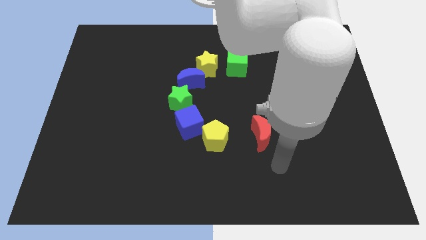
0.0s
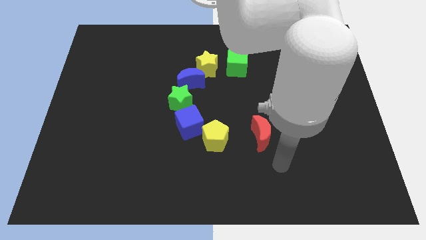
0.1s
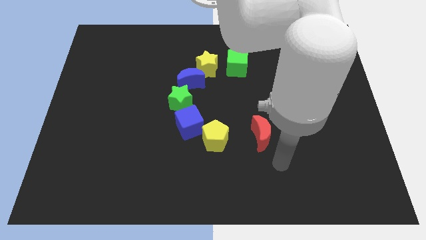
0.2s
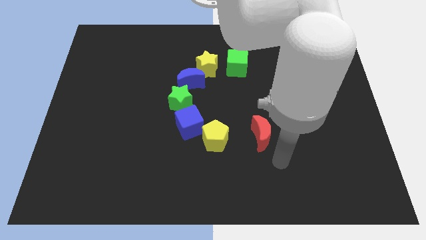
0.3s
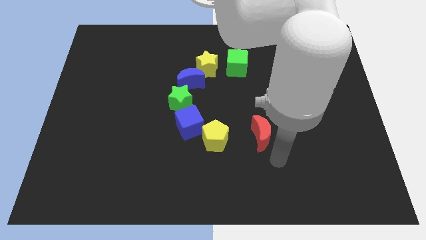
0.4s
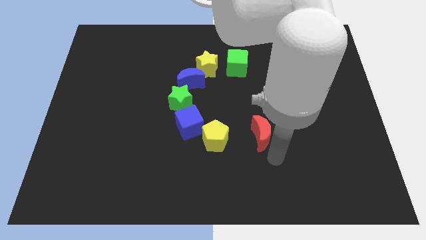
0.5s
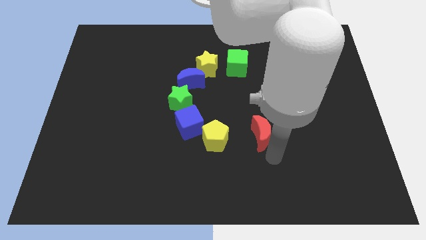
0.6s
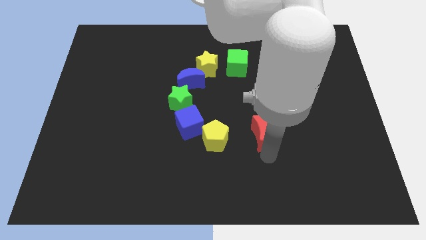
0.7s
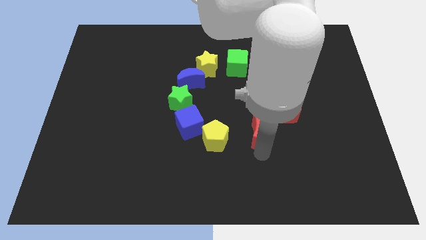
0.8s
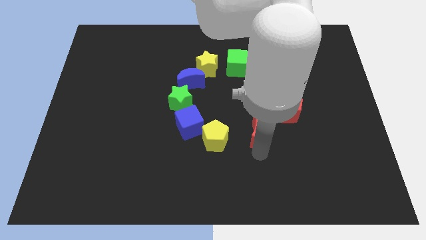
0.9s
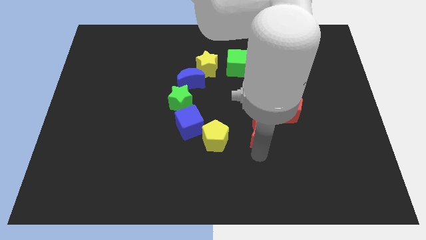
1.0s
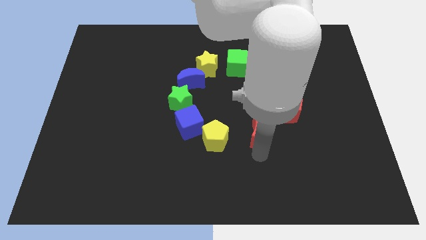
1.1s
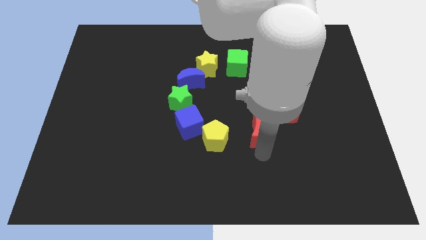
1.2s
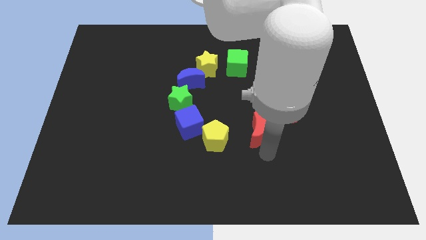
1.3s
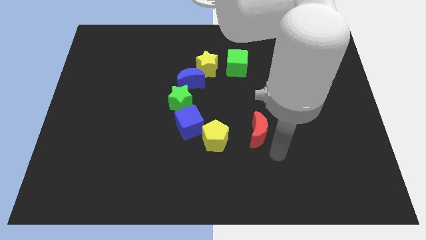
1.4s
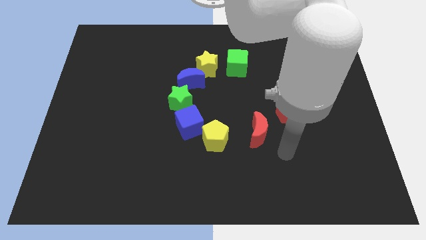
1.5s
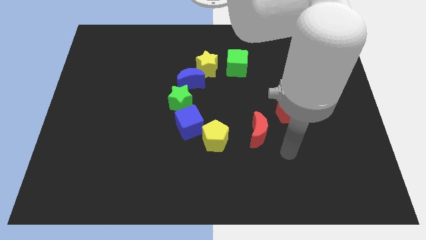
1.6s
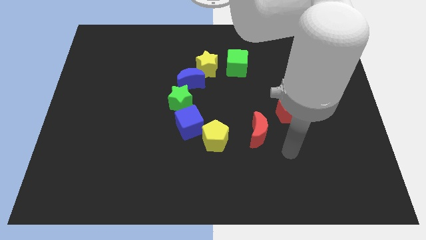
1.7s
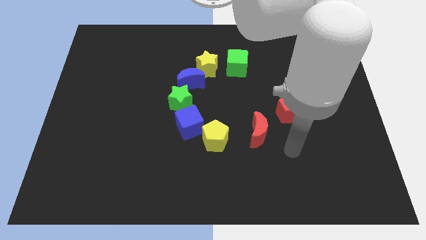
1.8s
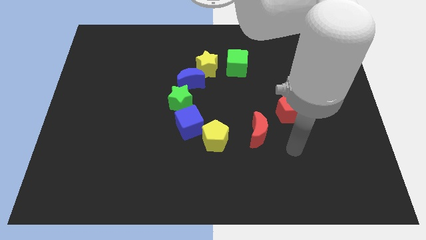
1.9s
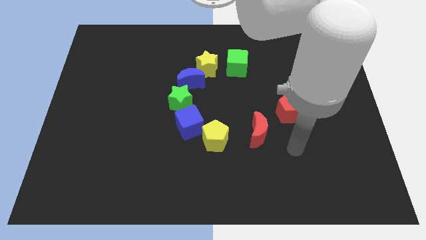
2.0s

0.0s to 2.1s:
move the red crescent to the top right side of the yellow pentagon

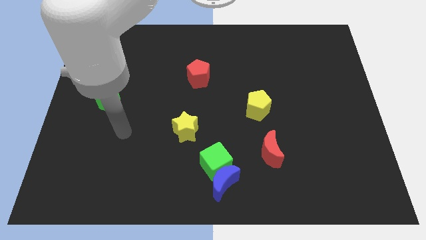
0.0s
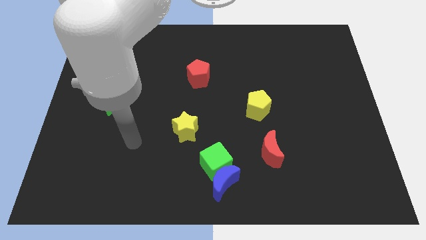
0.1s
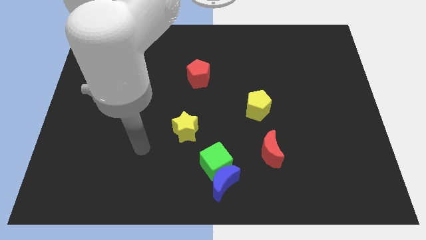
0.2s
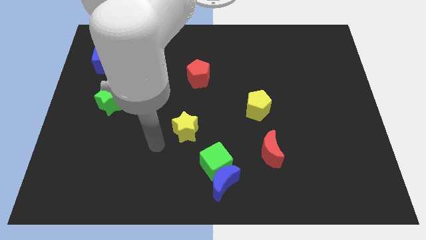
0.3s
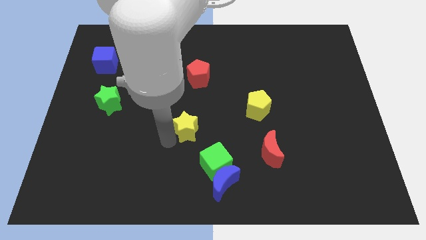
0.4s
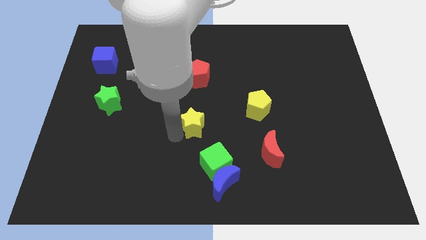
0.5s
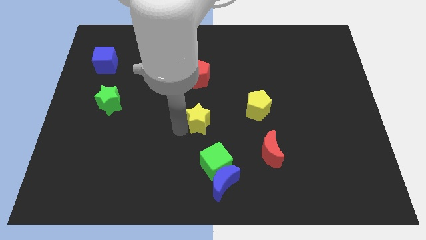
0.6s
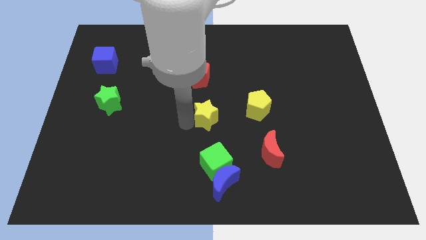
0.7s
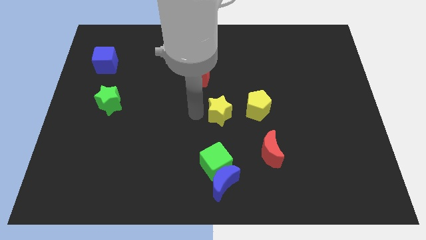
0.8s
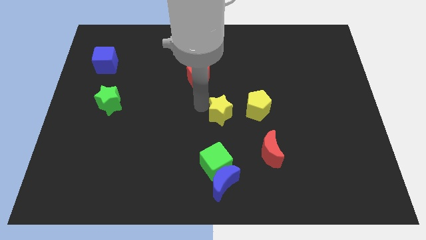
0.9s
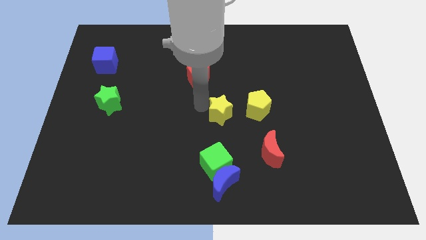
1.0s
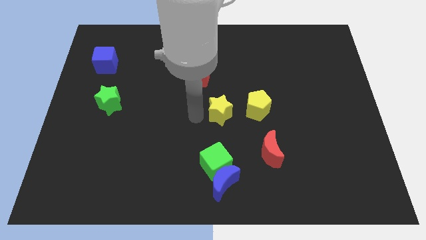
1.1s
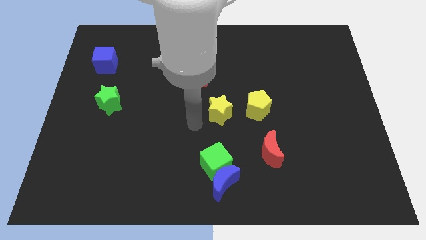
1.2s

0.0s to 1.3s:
place the yellow star left to the yellow pentagon

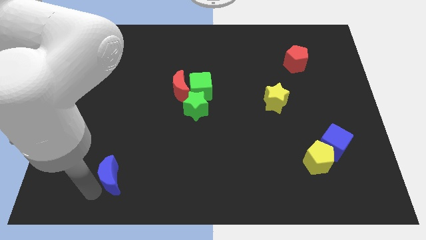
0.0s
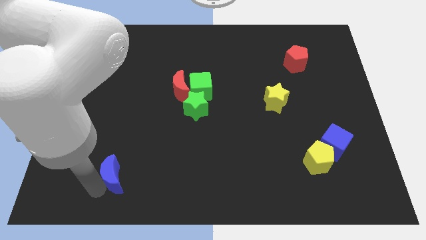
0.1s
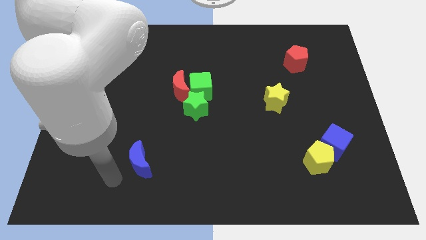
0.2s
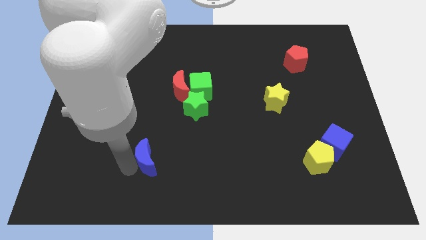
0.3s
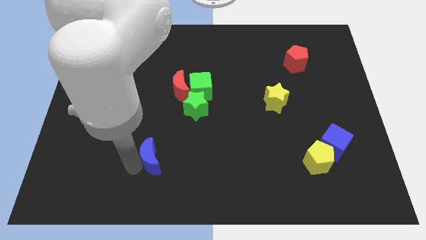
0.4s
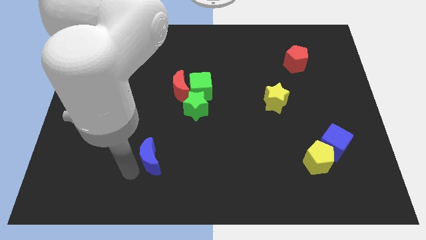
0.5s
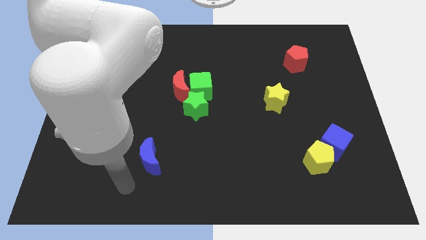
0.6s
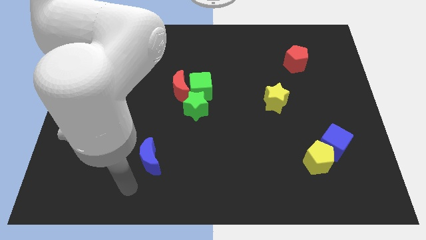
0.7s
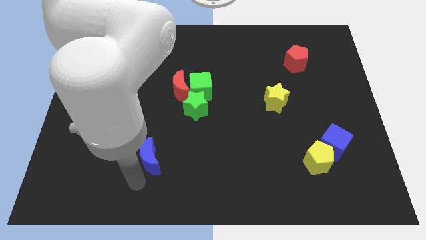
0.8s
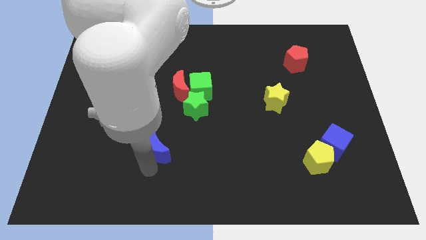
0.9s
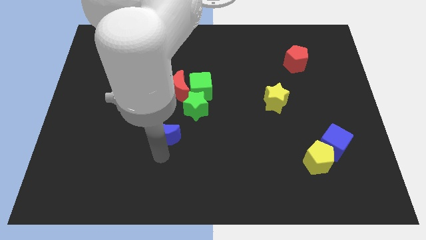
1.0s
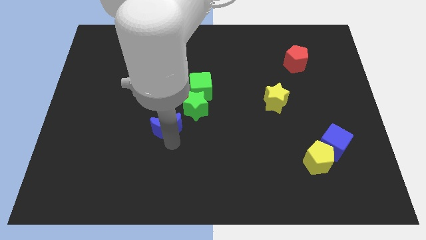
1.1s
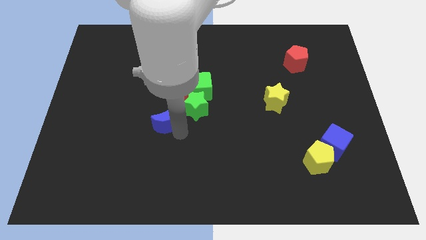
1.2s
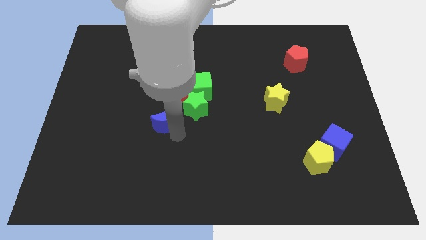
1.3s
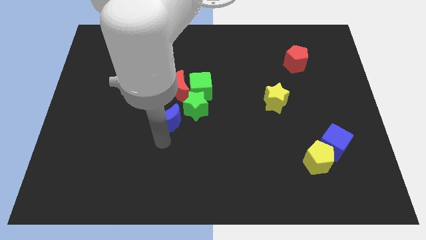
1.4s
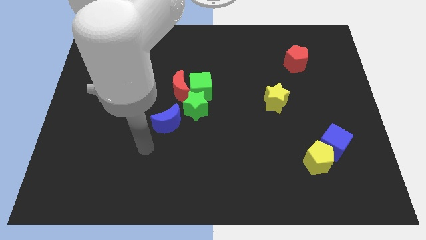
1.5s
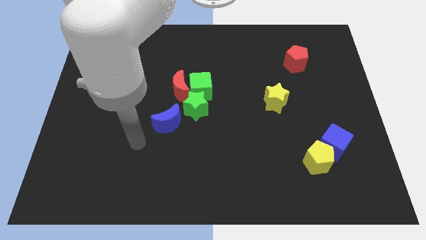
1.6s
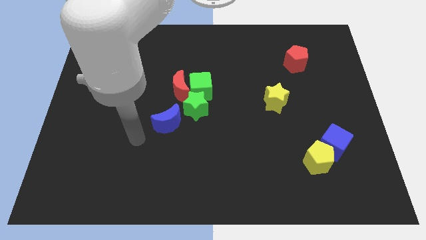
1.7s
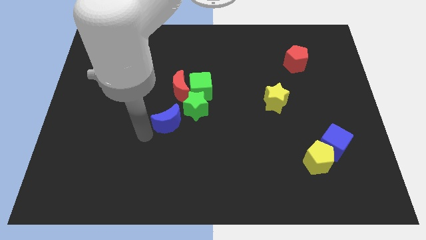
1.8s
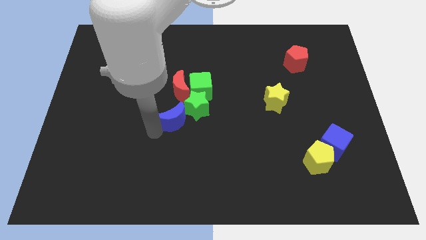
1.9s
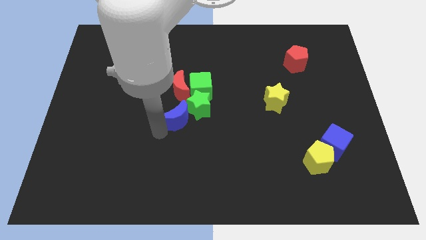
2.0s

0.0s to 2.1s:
push the blue moon to the left side of the green star

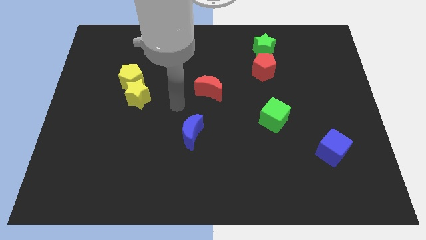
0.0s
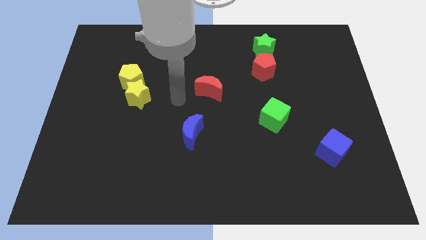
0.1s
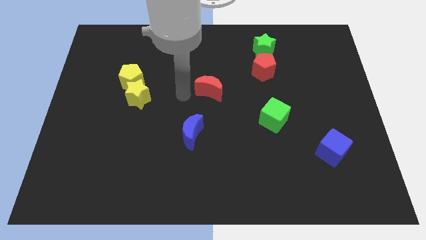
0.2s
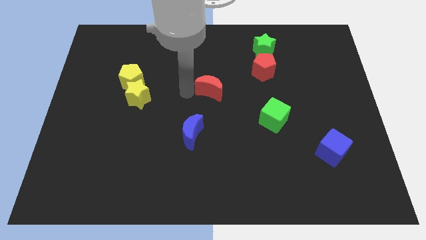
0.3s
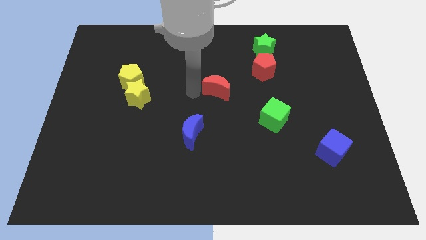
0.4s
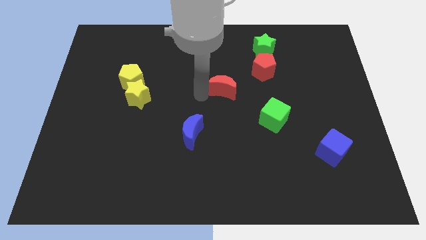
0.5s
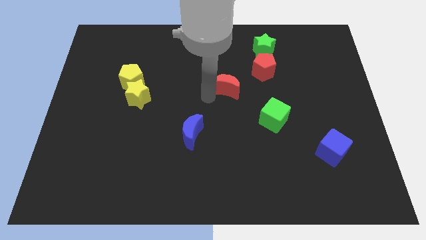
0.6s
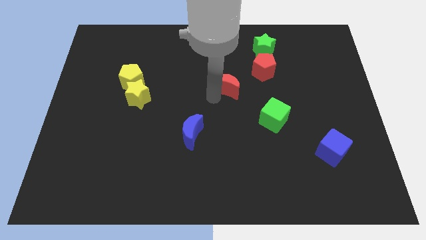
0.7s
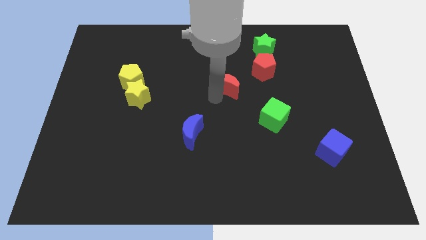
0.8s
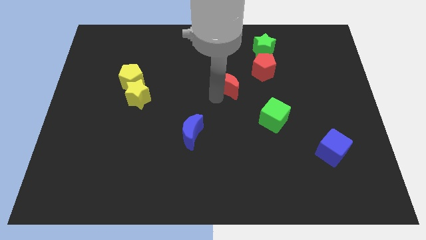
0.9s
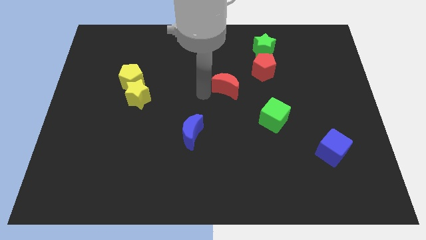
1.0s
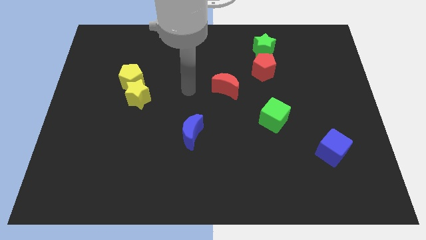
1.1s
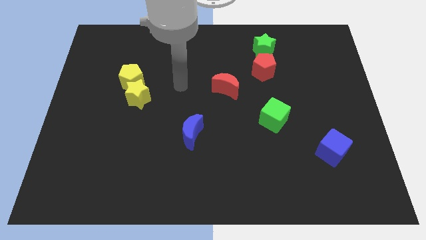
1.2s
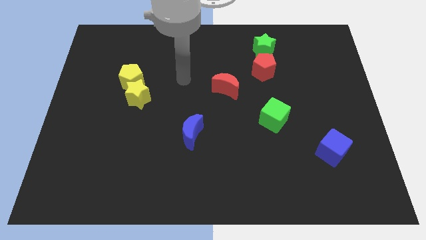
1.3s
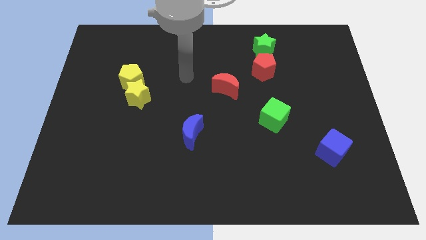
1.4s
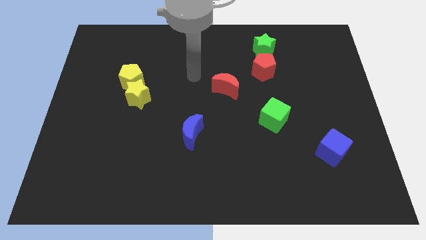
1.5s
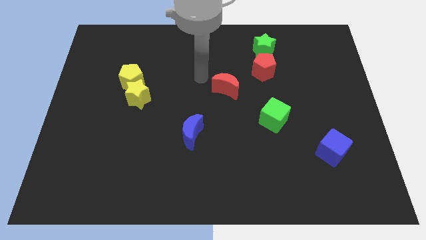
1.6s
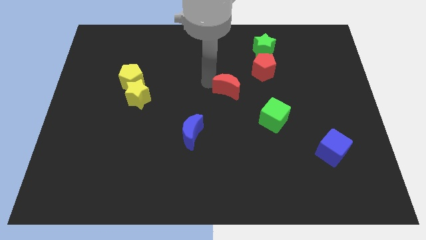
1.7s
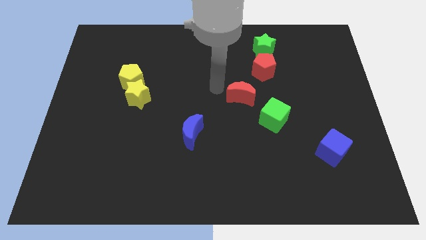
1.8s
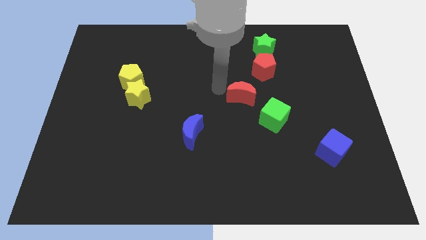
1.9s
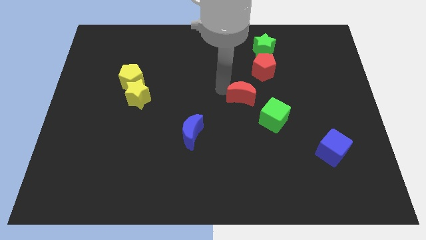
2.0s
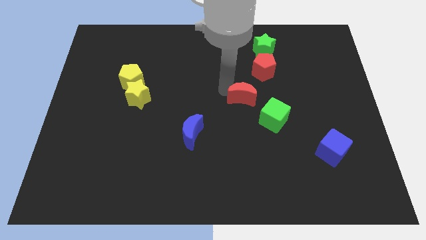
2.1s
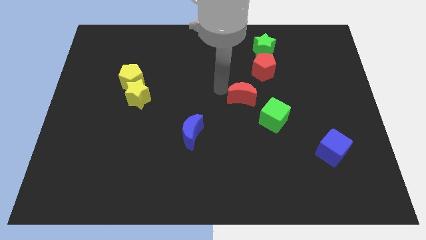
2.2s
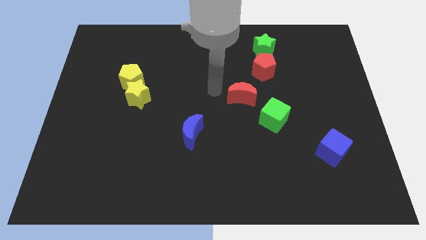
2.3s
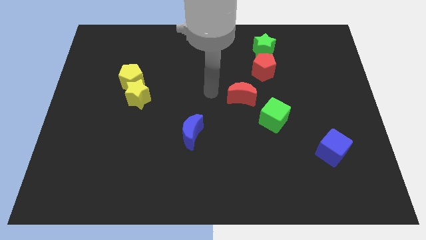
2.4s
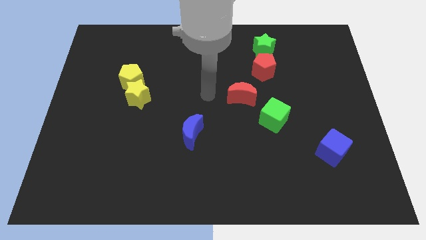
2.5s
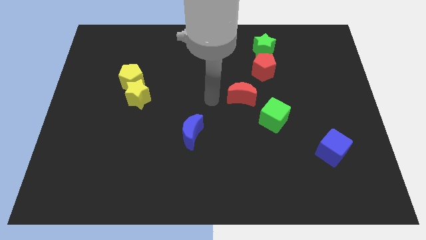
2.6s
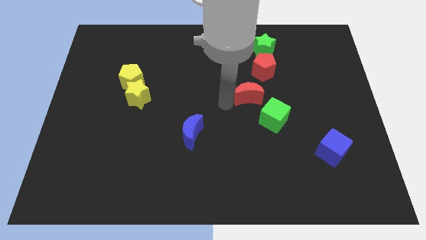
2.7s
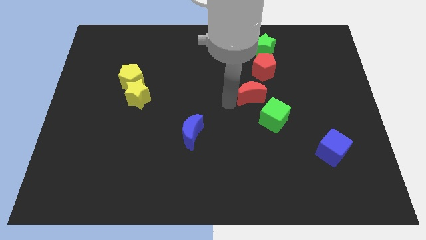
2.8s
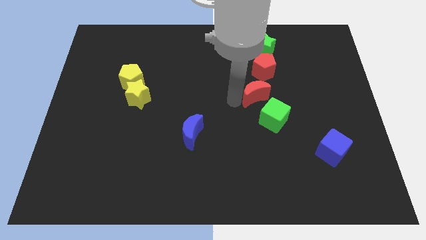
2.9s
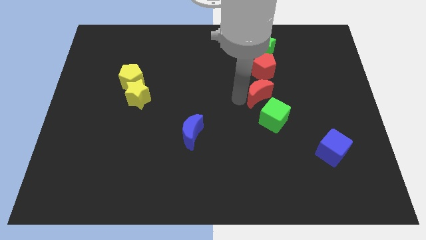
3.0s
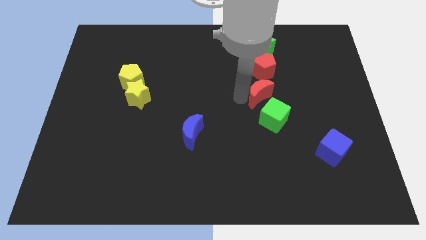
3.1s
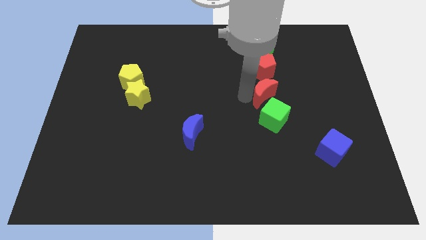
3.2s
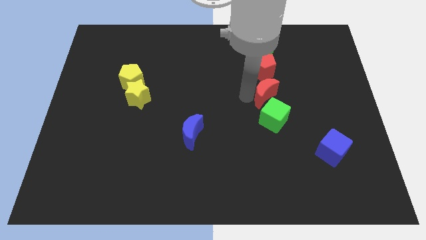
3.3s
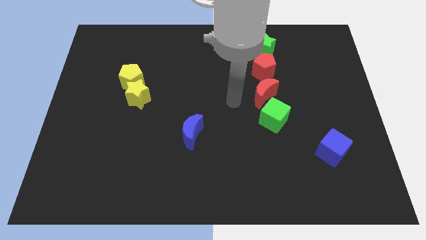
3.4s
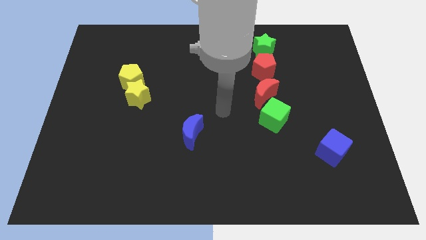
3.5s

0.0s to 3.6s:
place the red crescent between red pentagon and green cube
